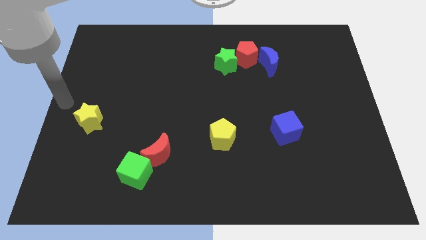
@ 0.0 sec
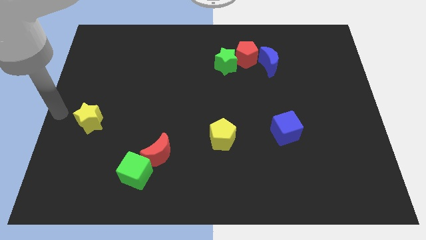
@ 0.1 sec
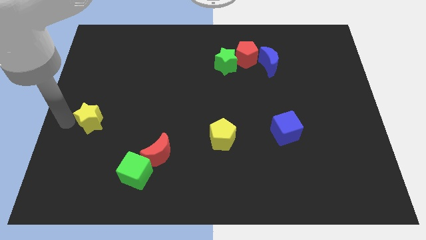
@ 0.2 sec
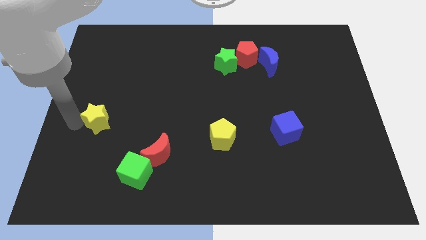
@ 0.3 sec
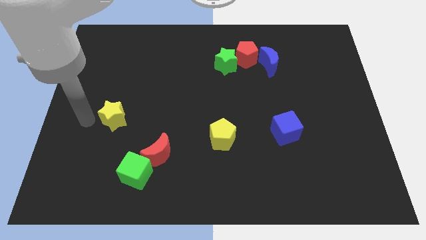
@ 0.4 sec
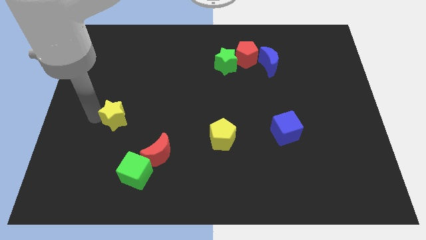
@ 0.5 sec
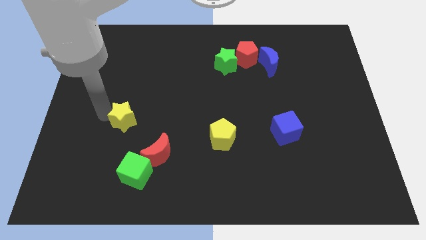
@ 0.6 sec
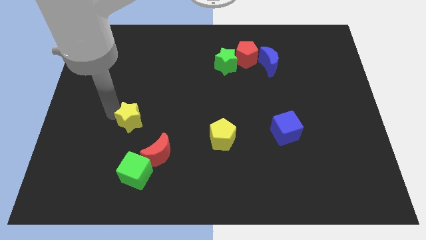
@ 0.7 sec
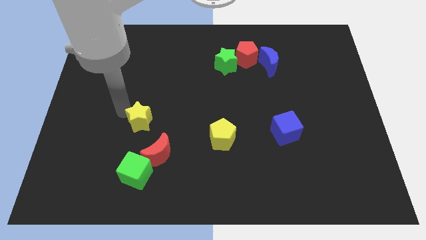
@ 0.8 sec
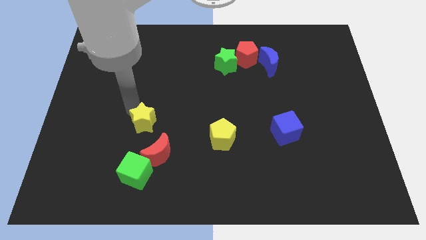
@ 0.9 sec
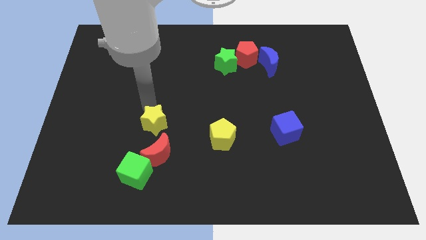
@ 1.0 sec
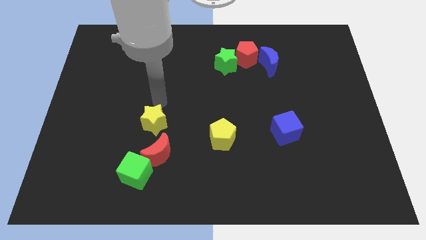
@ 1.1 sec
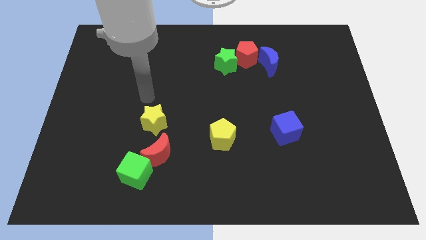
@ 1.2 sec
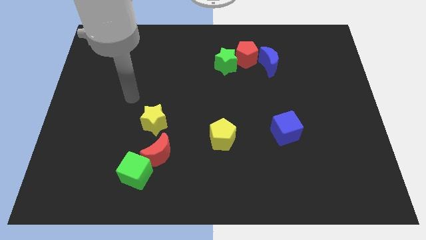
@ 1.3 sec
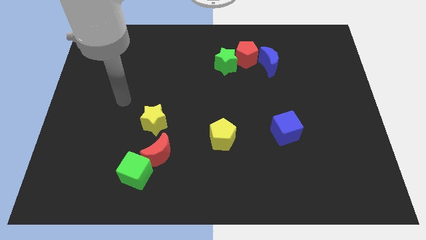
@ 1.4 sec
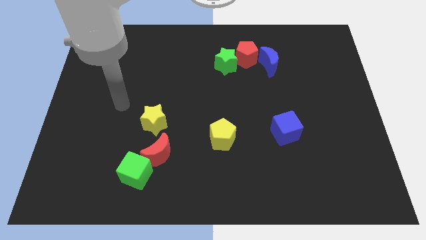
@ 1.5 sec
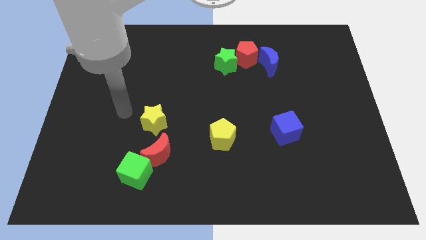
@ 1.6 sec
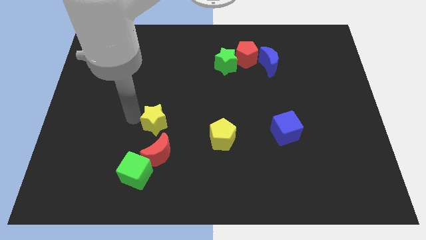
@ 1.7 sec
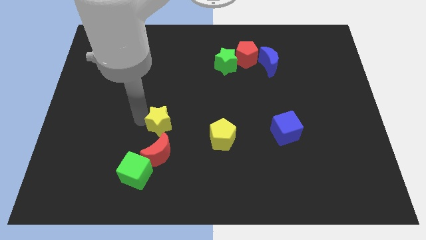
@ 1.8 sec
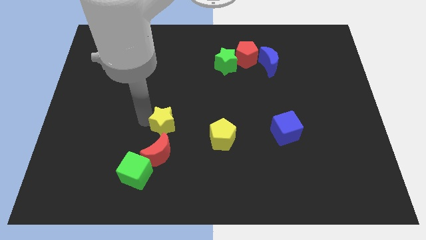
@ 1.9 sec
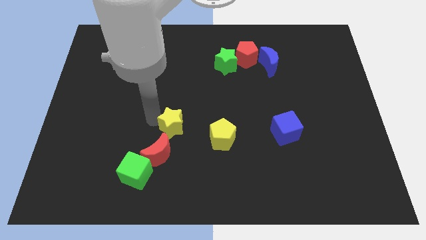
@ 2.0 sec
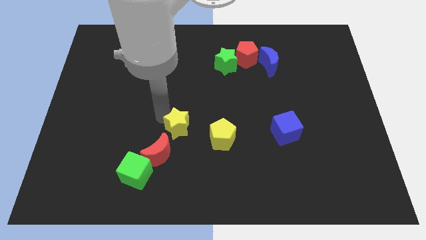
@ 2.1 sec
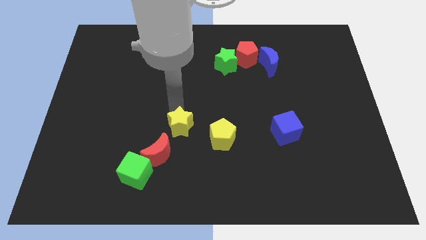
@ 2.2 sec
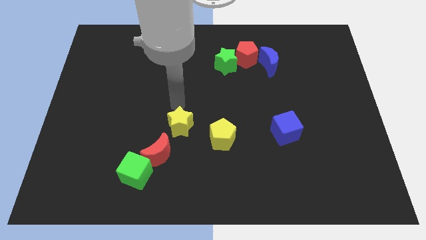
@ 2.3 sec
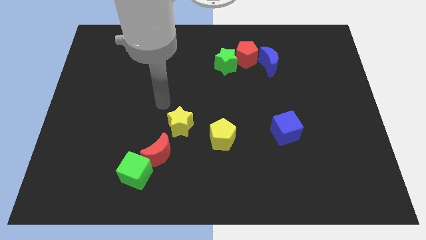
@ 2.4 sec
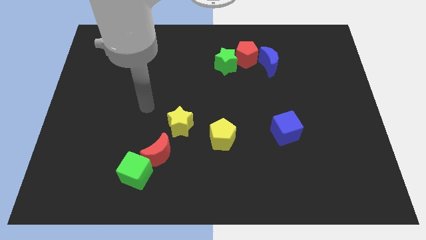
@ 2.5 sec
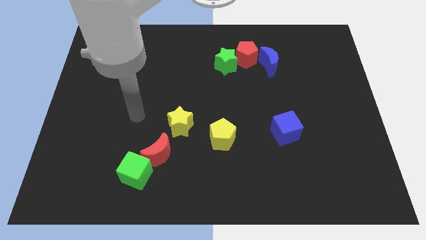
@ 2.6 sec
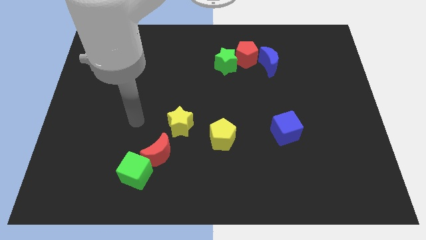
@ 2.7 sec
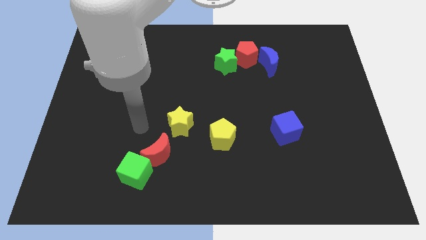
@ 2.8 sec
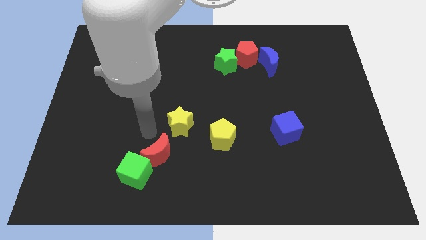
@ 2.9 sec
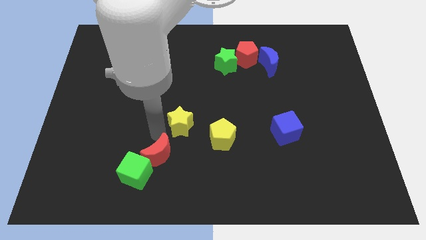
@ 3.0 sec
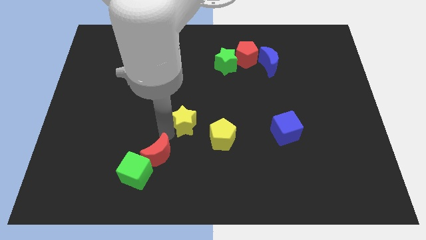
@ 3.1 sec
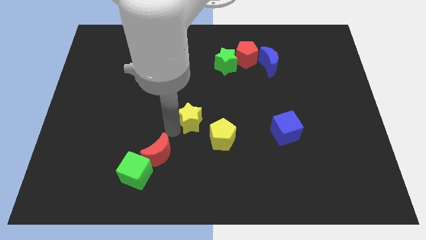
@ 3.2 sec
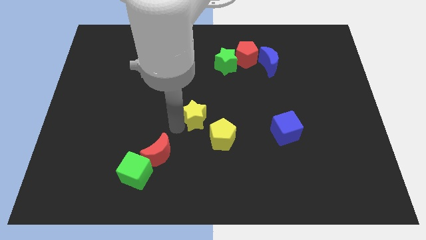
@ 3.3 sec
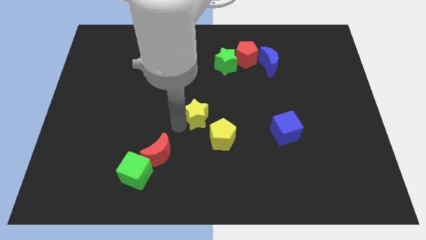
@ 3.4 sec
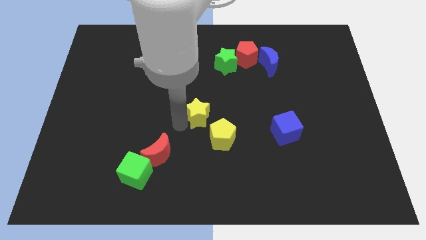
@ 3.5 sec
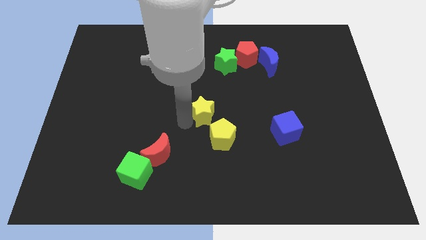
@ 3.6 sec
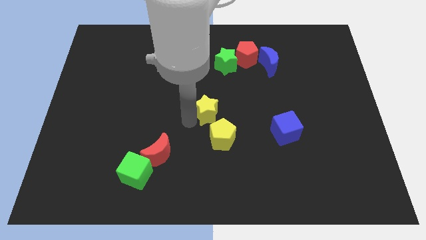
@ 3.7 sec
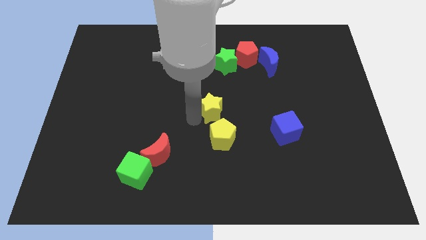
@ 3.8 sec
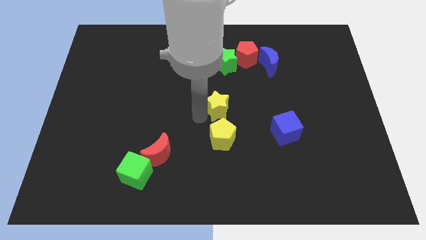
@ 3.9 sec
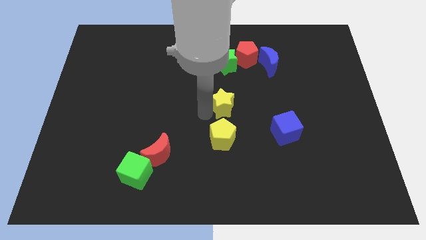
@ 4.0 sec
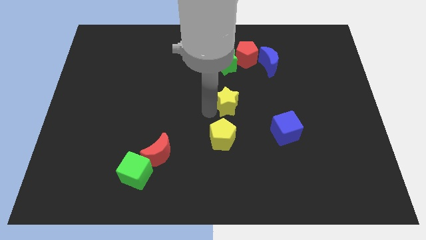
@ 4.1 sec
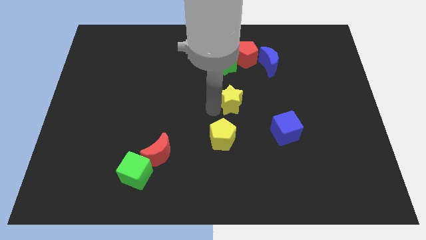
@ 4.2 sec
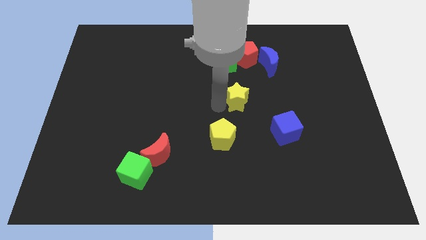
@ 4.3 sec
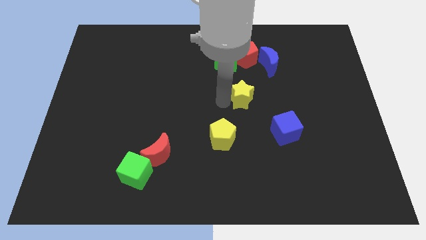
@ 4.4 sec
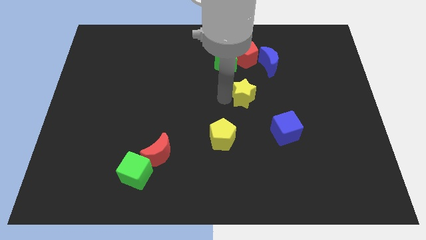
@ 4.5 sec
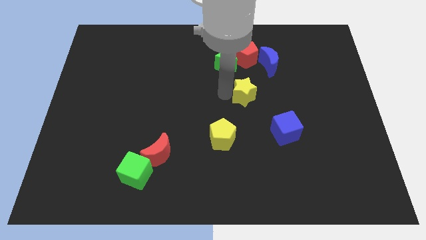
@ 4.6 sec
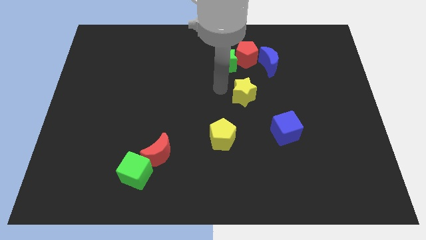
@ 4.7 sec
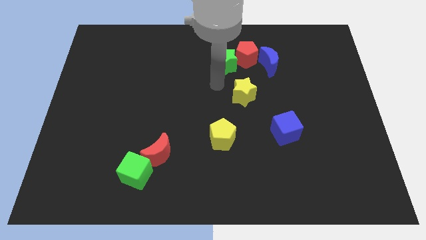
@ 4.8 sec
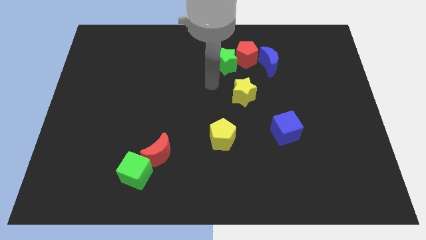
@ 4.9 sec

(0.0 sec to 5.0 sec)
put the yellow star in between the blue crescent and yellow pentagon

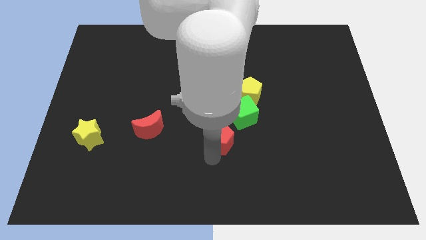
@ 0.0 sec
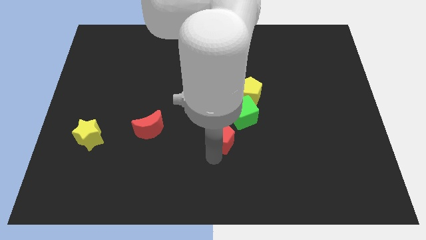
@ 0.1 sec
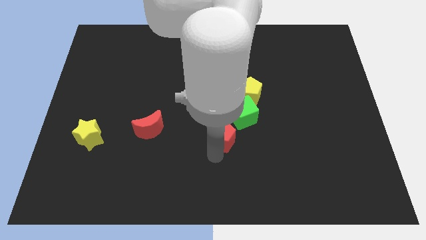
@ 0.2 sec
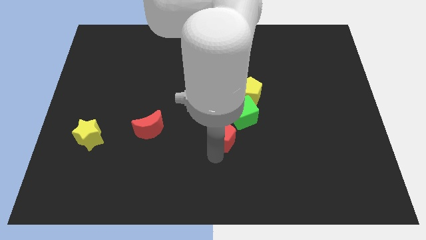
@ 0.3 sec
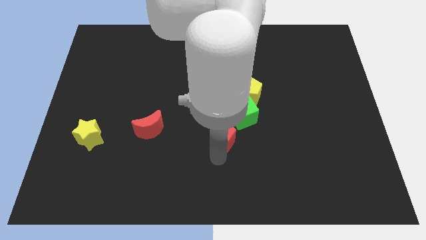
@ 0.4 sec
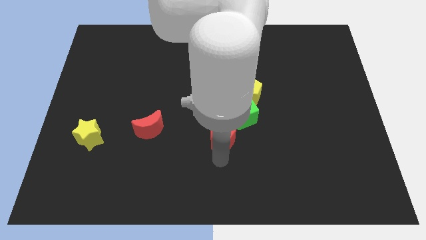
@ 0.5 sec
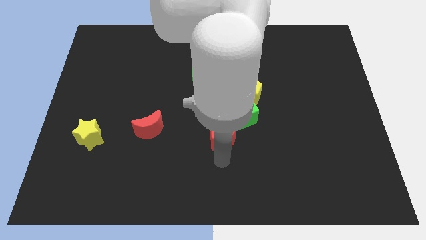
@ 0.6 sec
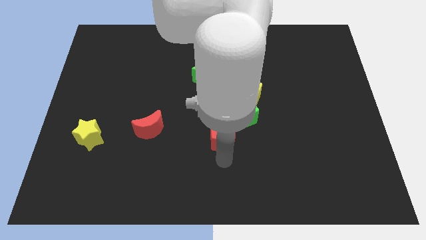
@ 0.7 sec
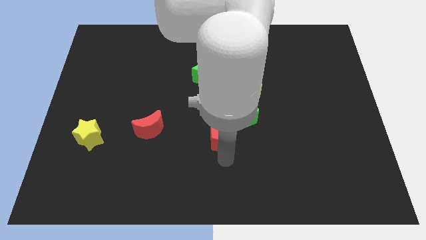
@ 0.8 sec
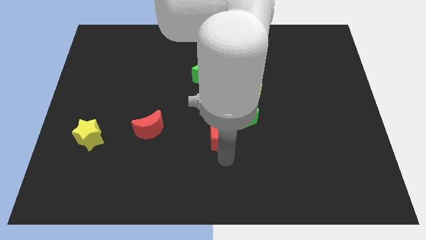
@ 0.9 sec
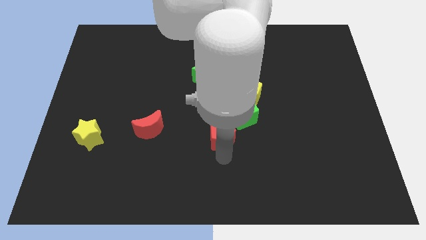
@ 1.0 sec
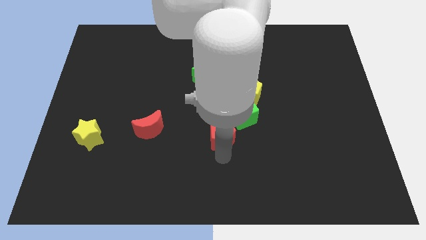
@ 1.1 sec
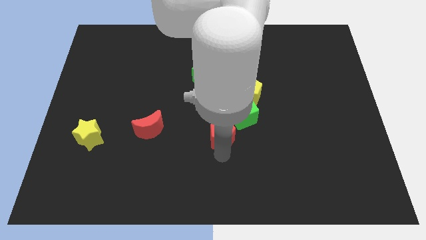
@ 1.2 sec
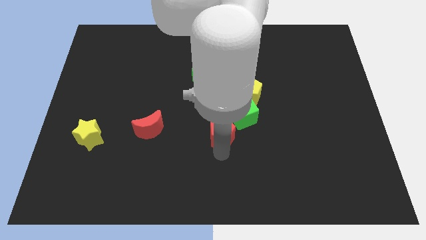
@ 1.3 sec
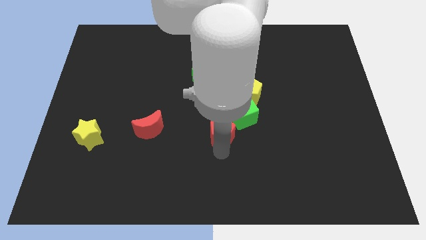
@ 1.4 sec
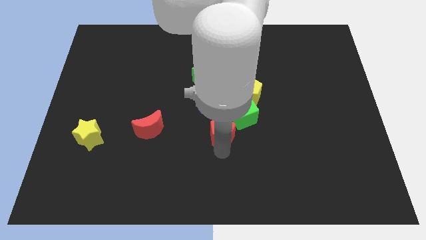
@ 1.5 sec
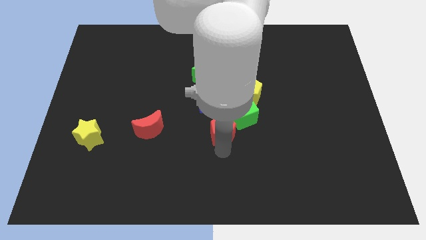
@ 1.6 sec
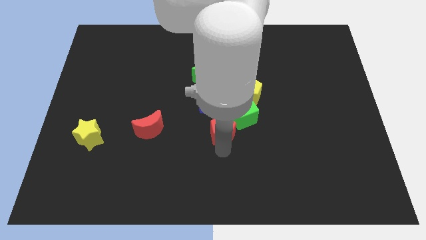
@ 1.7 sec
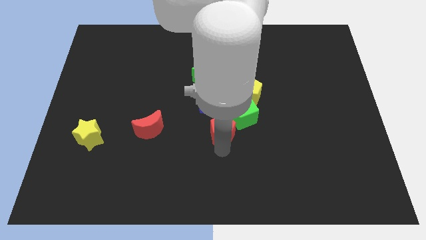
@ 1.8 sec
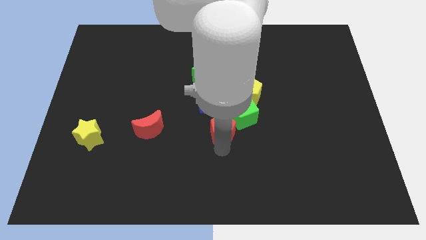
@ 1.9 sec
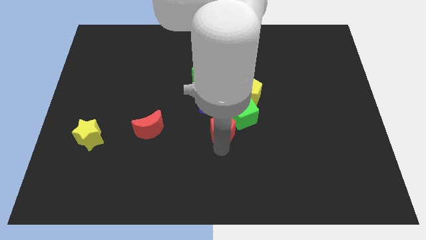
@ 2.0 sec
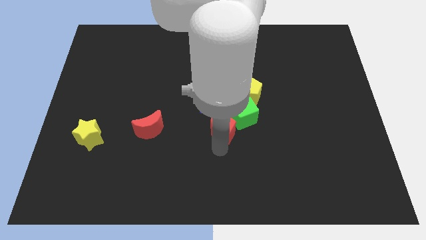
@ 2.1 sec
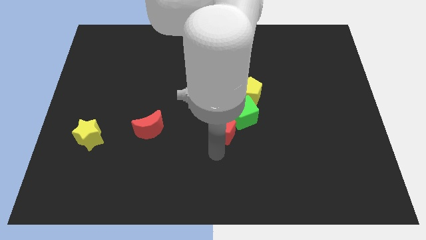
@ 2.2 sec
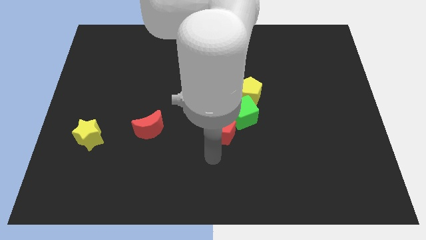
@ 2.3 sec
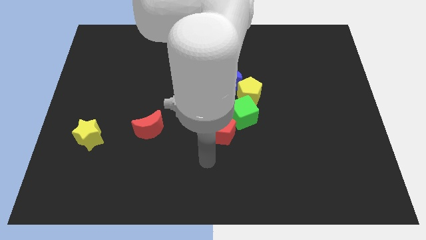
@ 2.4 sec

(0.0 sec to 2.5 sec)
move the red pentagon close to the bottom left side of the green cube

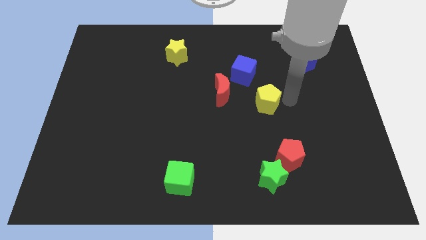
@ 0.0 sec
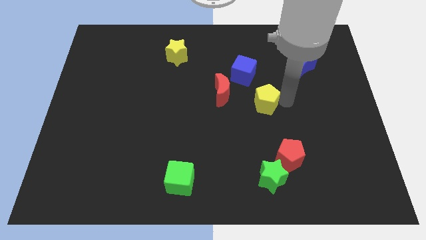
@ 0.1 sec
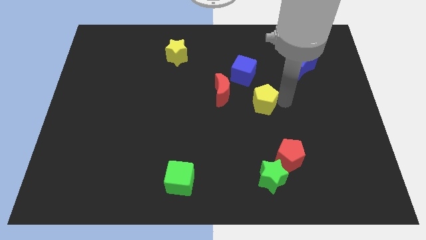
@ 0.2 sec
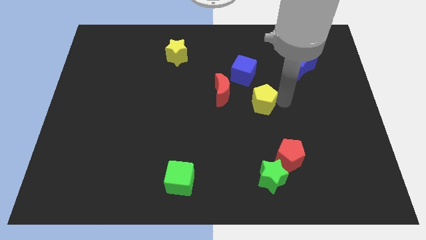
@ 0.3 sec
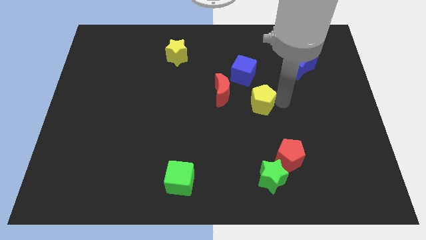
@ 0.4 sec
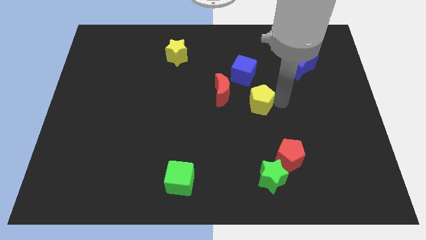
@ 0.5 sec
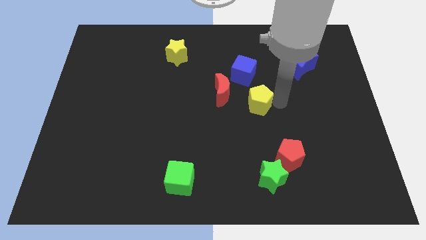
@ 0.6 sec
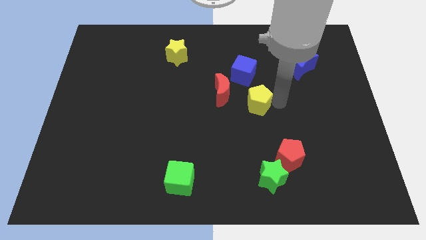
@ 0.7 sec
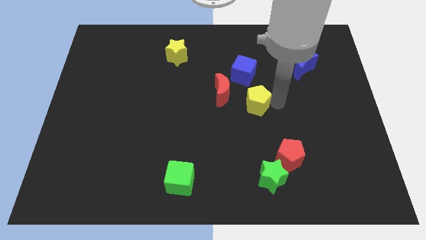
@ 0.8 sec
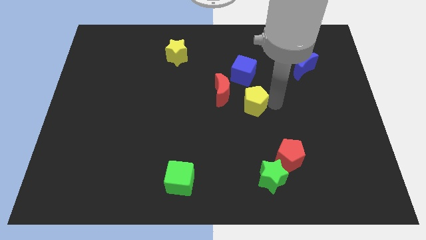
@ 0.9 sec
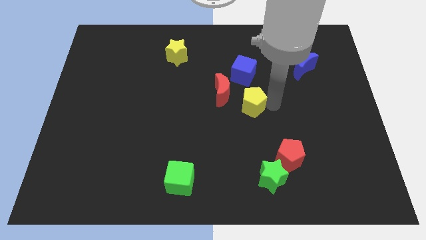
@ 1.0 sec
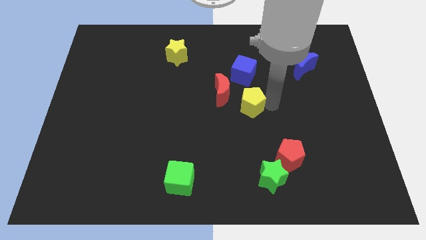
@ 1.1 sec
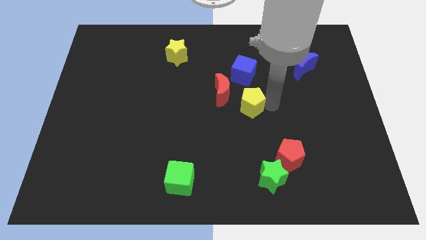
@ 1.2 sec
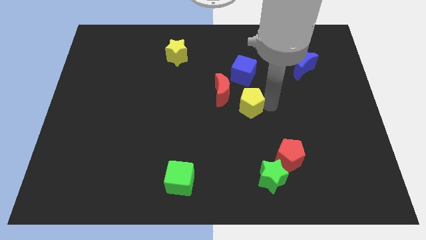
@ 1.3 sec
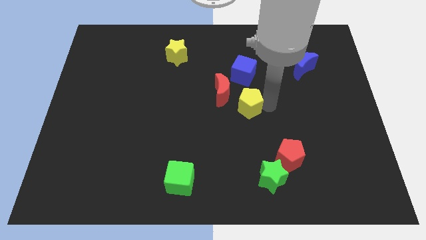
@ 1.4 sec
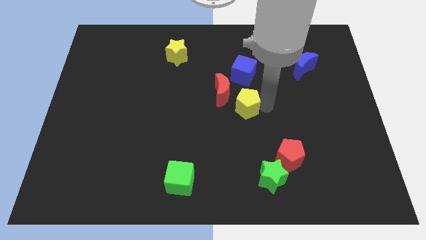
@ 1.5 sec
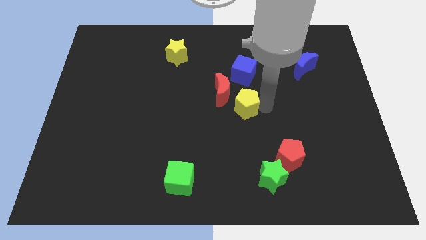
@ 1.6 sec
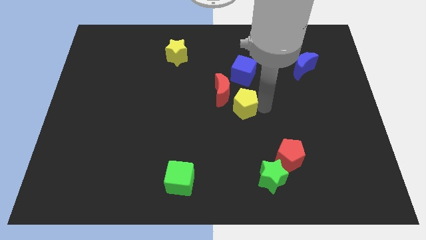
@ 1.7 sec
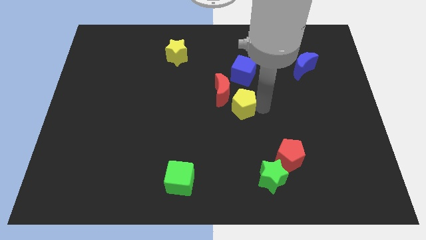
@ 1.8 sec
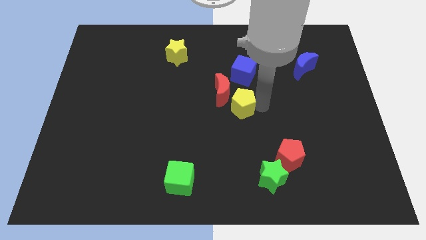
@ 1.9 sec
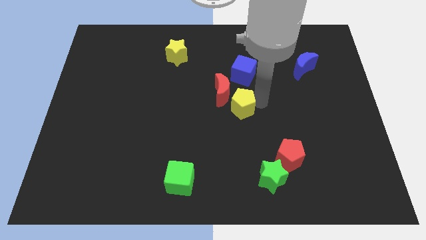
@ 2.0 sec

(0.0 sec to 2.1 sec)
place the yellow pentagon at the bottom right side of red moon
